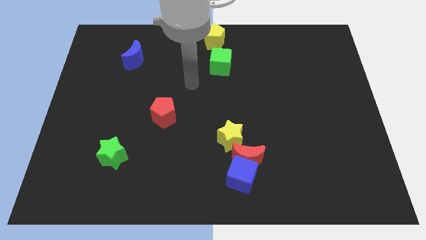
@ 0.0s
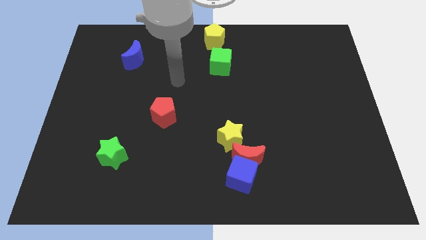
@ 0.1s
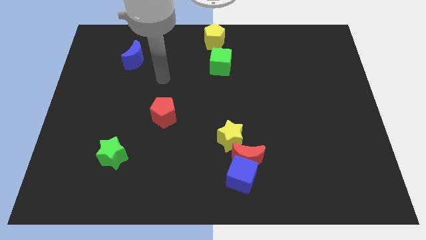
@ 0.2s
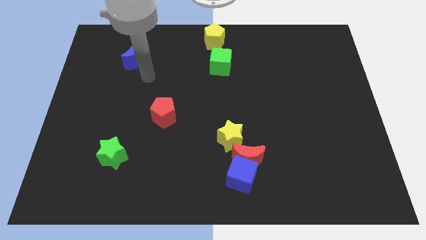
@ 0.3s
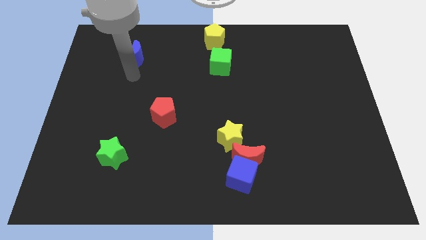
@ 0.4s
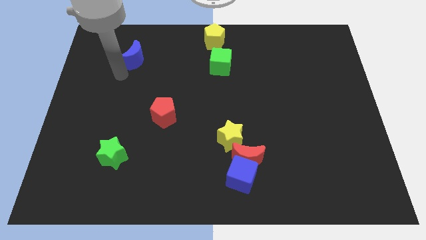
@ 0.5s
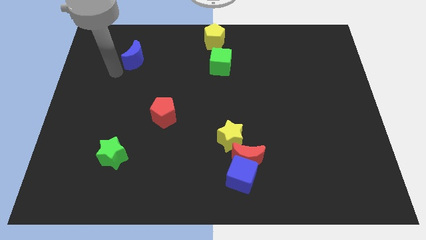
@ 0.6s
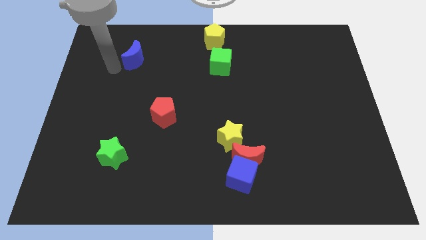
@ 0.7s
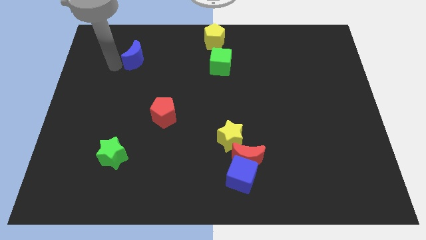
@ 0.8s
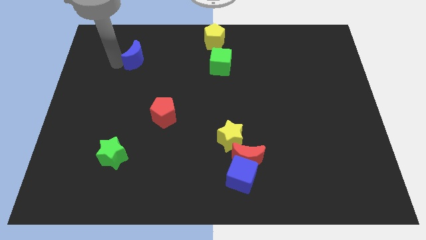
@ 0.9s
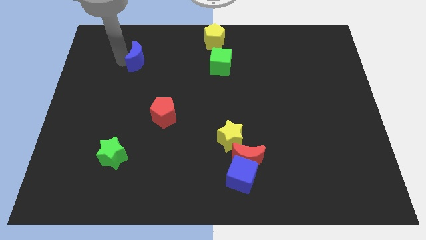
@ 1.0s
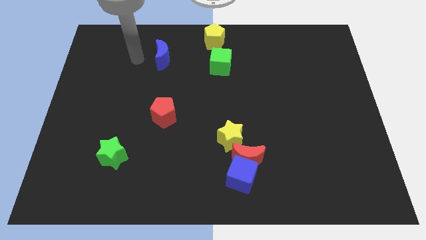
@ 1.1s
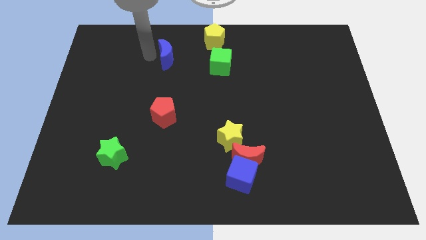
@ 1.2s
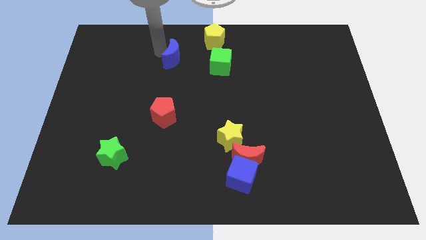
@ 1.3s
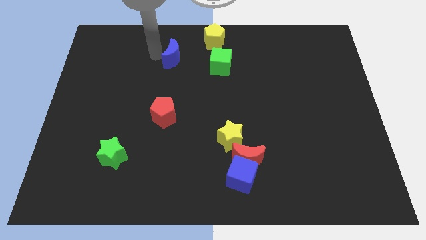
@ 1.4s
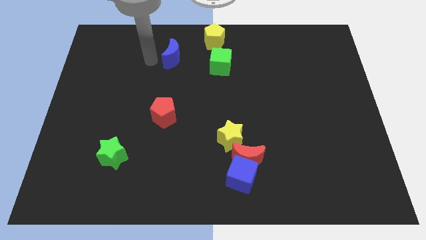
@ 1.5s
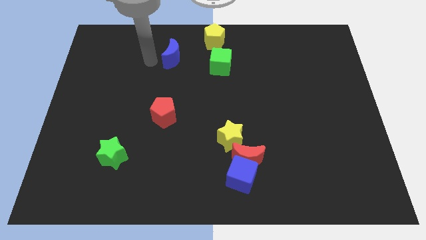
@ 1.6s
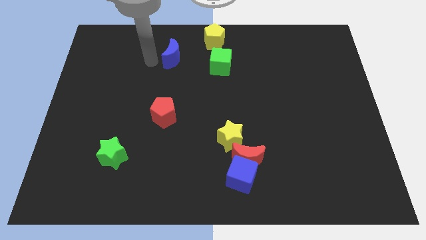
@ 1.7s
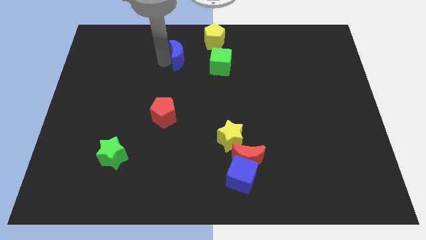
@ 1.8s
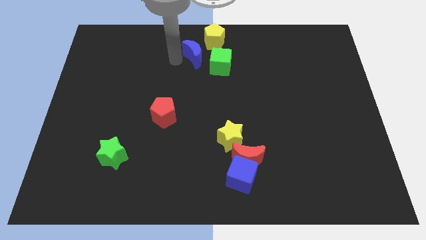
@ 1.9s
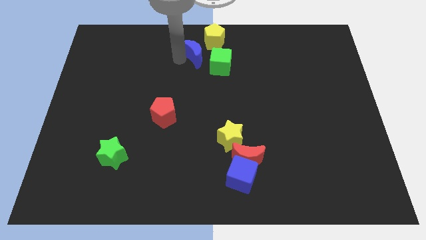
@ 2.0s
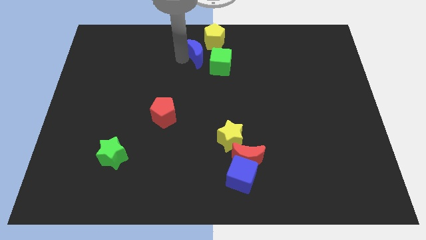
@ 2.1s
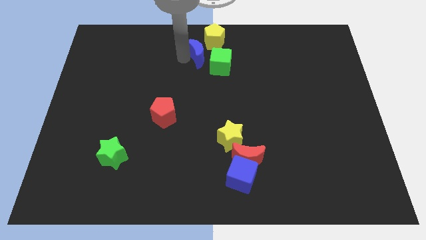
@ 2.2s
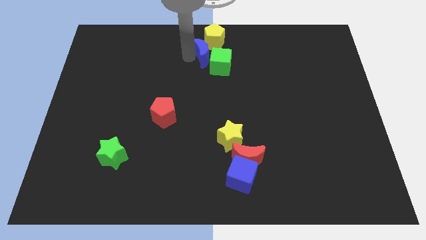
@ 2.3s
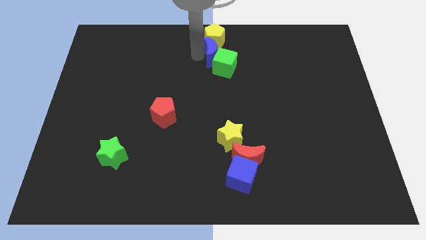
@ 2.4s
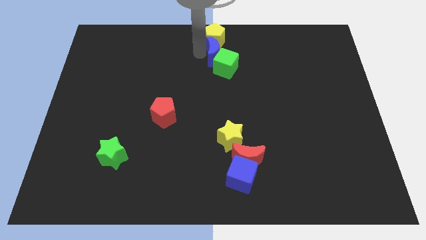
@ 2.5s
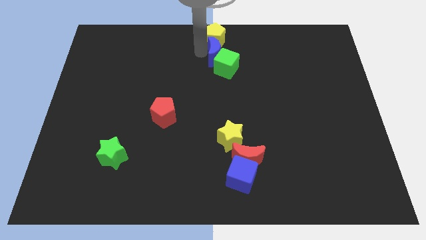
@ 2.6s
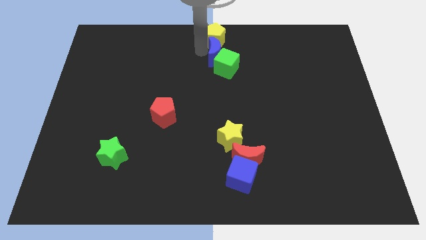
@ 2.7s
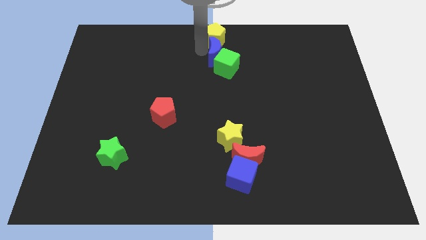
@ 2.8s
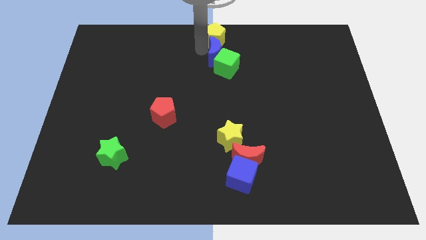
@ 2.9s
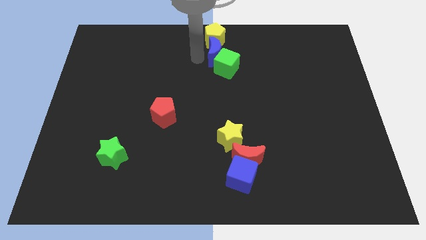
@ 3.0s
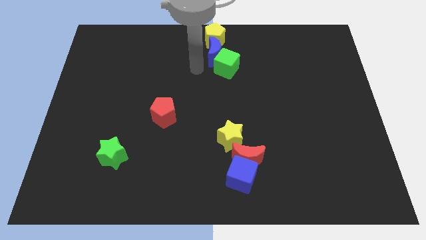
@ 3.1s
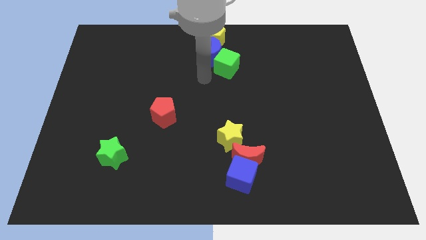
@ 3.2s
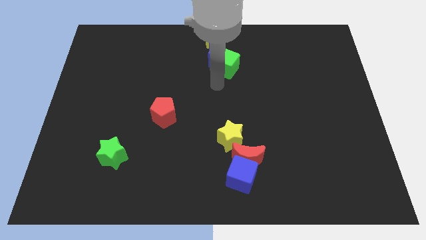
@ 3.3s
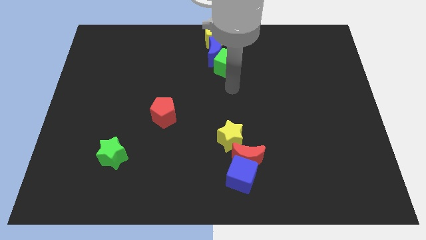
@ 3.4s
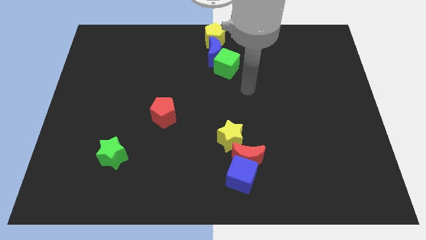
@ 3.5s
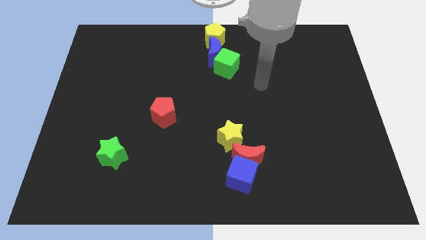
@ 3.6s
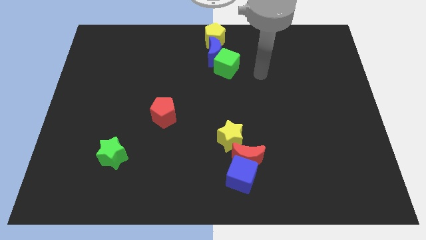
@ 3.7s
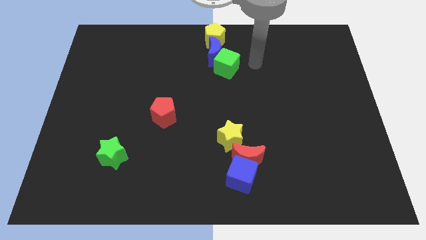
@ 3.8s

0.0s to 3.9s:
push the blue crescent to the bottom of the yellow pentagon

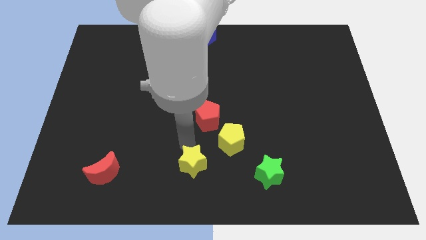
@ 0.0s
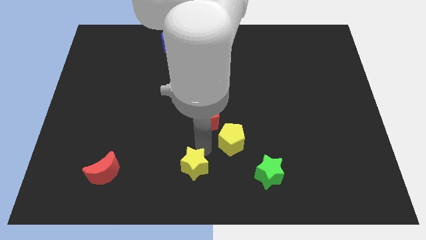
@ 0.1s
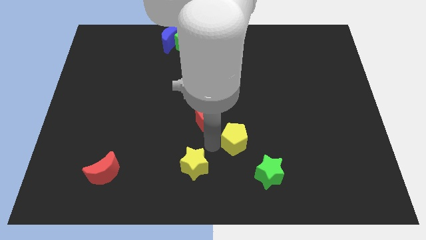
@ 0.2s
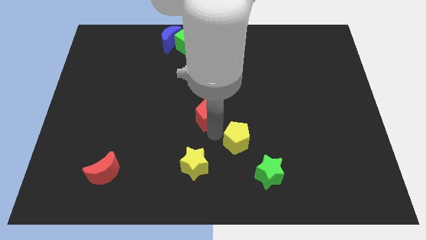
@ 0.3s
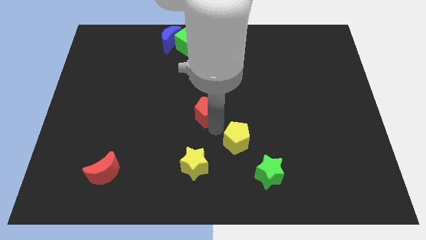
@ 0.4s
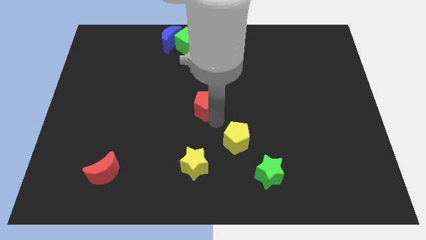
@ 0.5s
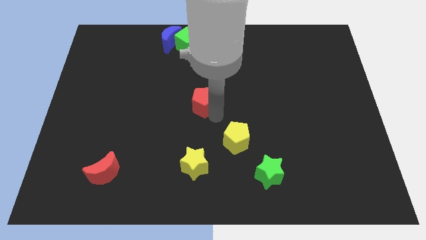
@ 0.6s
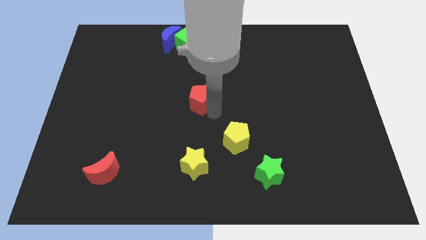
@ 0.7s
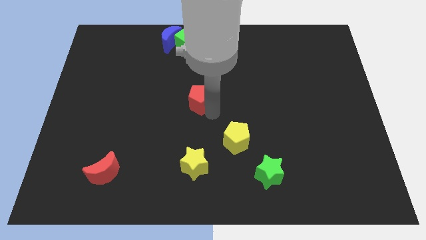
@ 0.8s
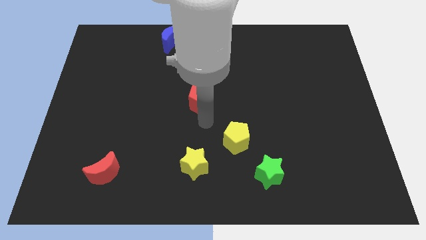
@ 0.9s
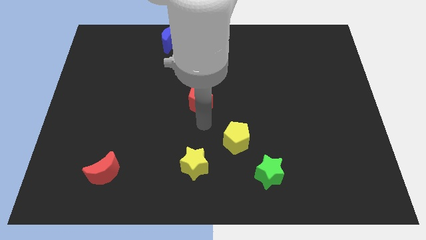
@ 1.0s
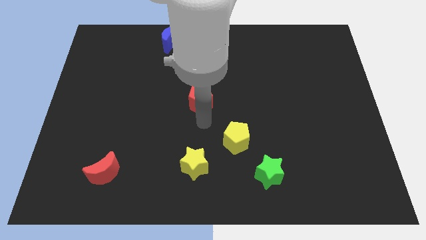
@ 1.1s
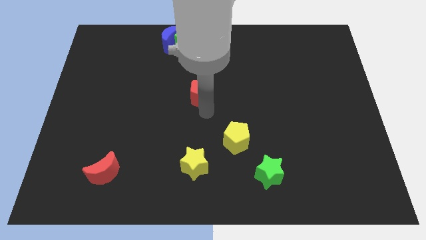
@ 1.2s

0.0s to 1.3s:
push the red pentagon upward slightly

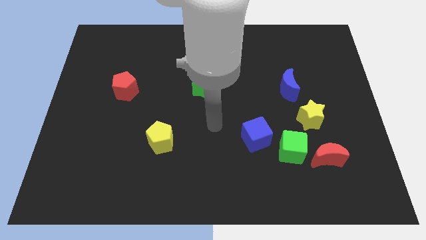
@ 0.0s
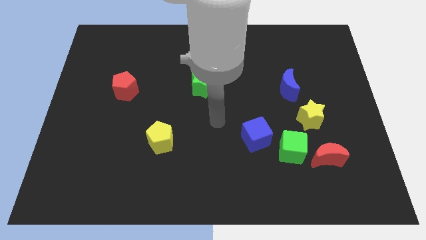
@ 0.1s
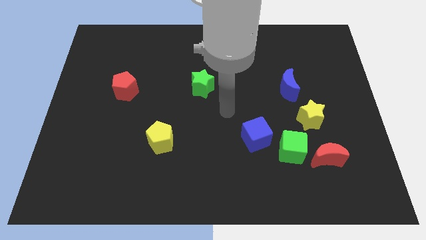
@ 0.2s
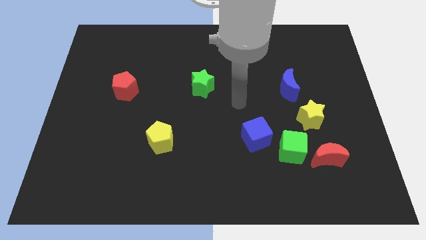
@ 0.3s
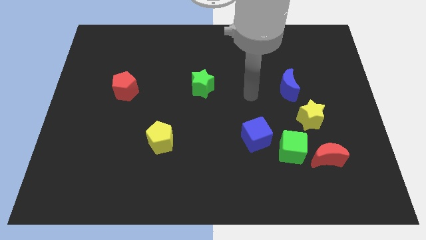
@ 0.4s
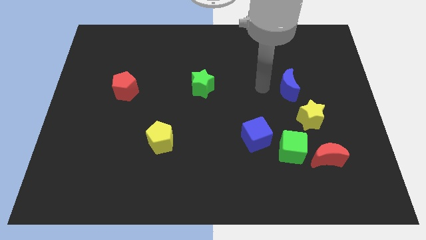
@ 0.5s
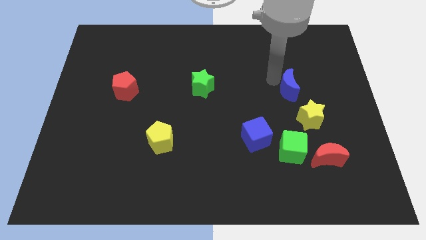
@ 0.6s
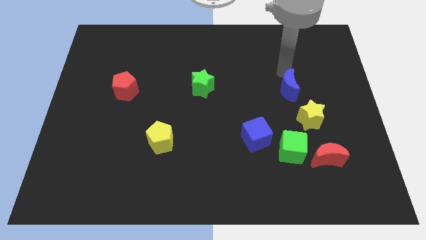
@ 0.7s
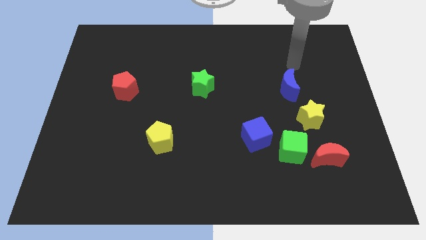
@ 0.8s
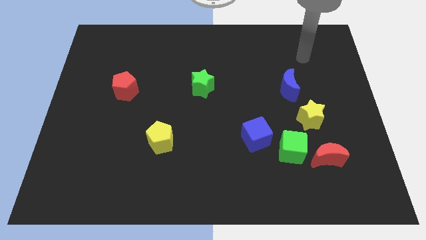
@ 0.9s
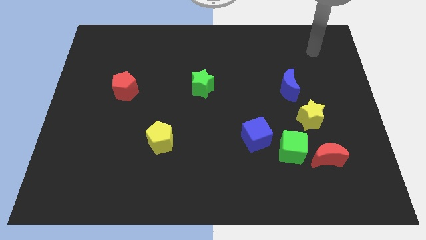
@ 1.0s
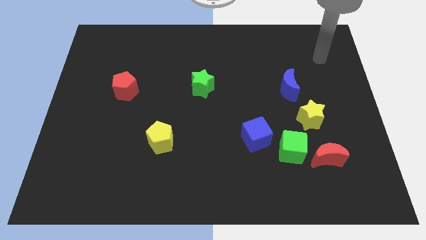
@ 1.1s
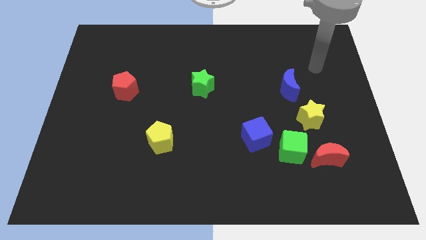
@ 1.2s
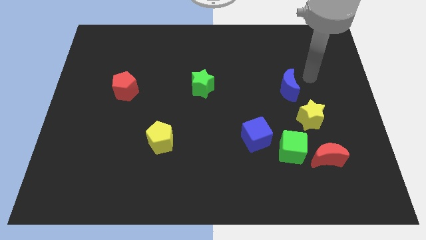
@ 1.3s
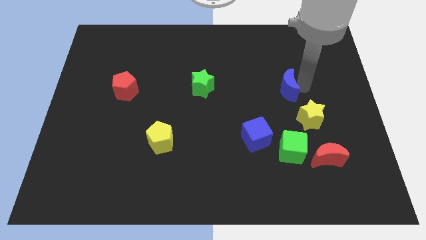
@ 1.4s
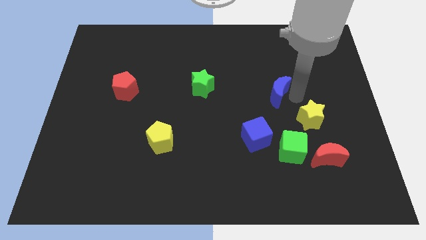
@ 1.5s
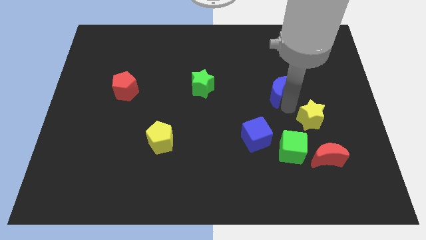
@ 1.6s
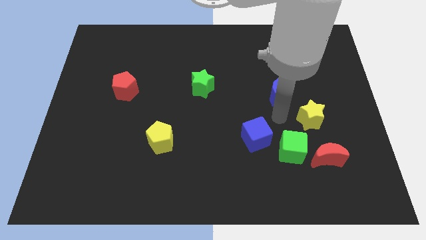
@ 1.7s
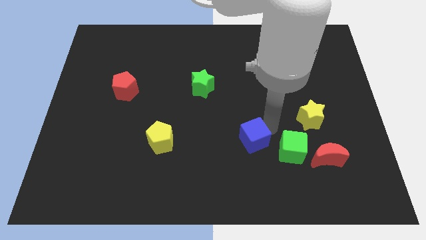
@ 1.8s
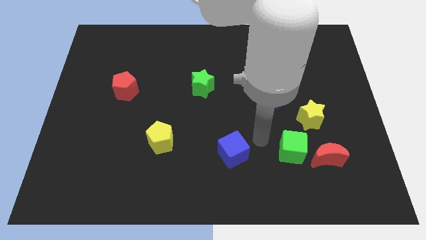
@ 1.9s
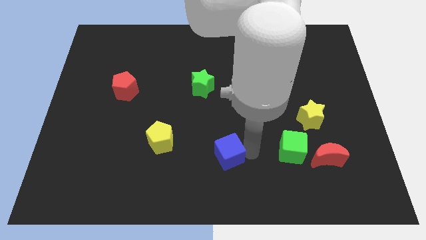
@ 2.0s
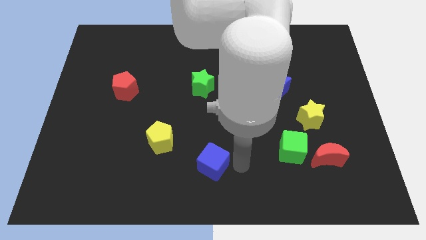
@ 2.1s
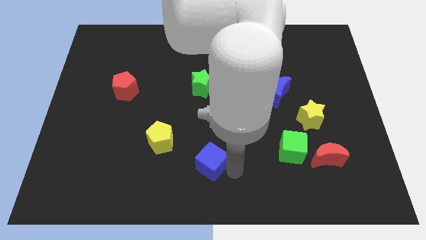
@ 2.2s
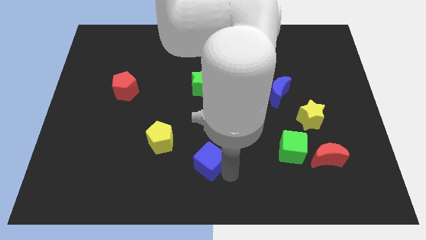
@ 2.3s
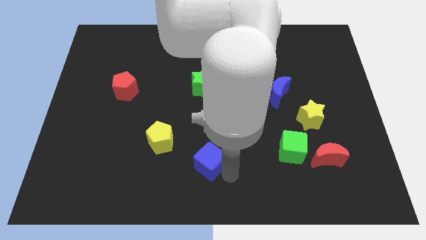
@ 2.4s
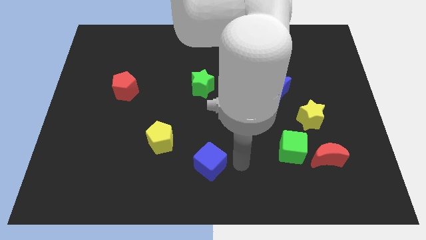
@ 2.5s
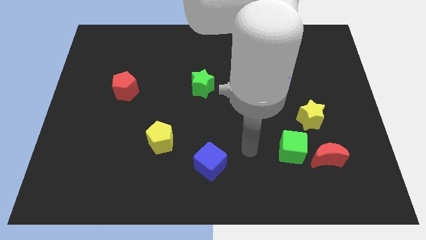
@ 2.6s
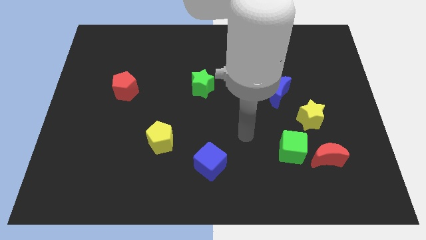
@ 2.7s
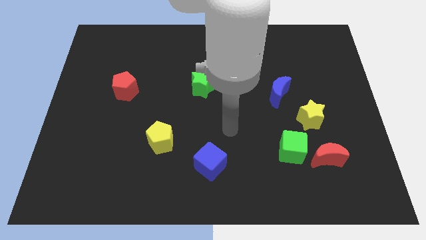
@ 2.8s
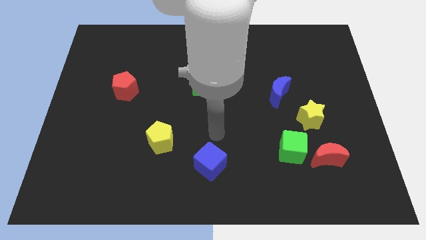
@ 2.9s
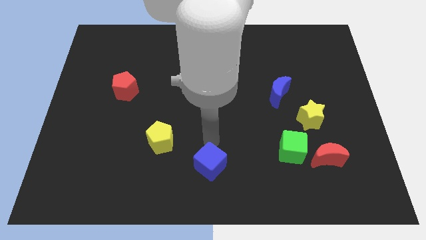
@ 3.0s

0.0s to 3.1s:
push the blue cube towards the bottom of the board

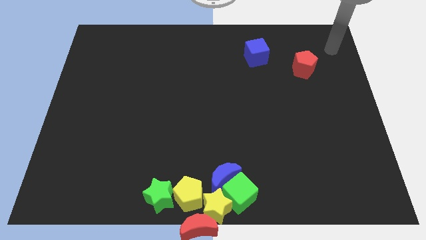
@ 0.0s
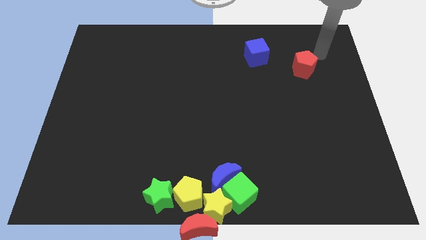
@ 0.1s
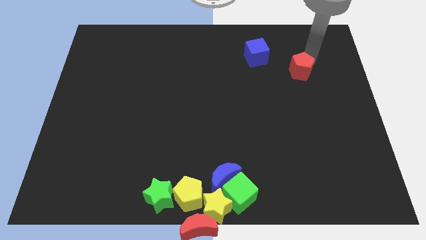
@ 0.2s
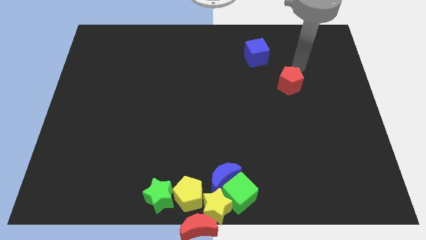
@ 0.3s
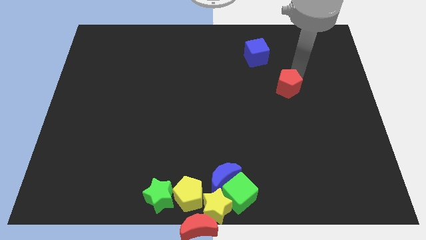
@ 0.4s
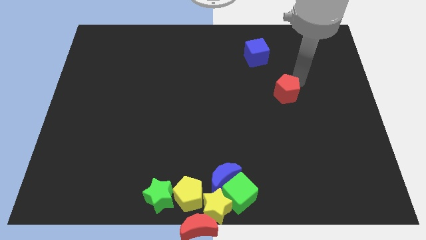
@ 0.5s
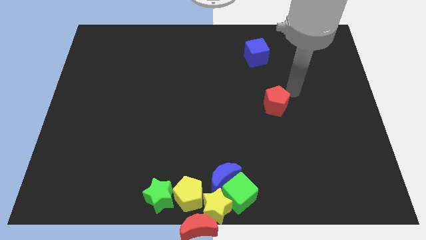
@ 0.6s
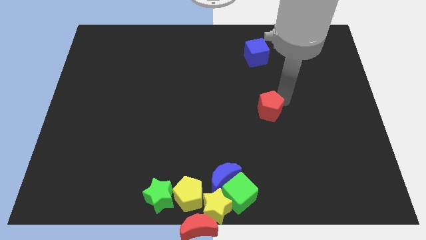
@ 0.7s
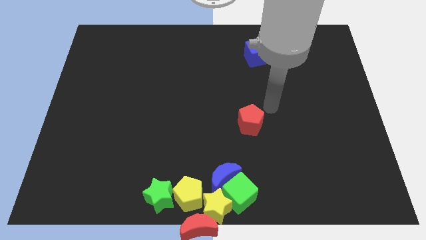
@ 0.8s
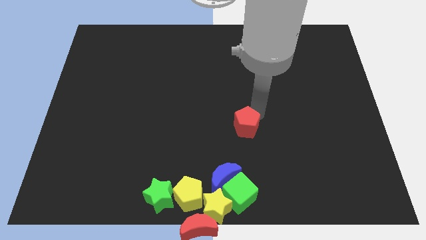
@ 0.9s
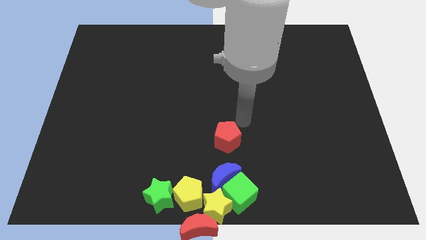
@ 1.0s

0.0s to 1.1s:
slide the red pentagon towards the group of blocks
